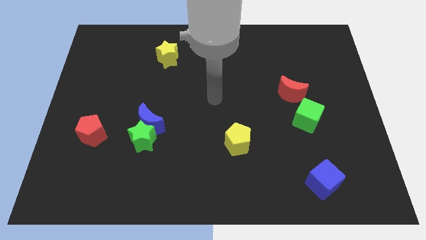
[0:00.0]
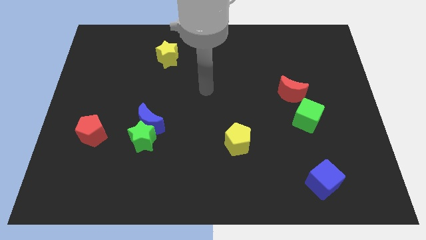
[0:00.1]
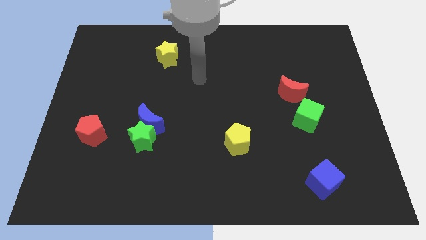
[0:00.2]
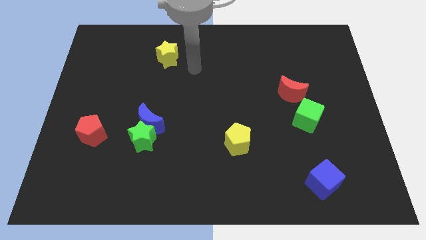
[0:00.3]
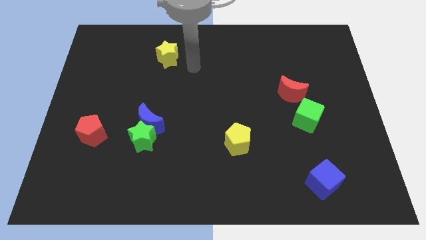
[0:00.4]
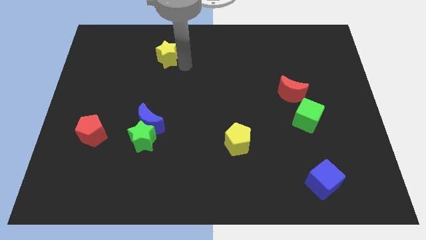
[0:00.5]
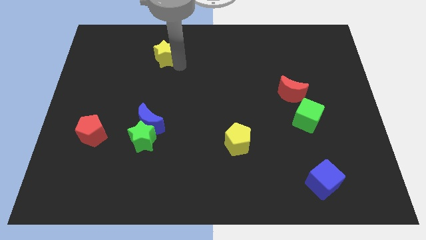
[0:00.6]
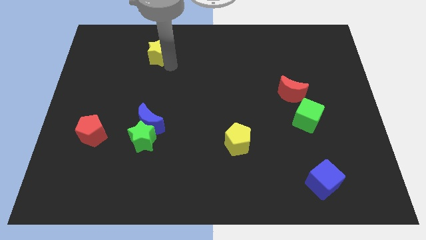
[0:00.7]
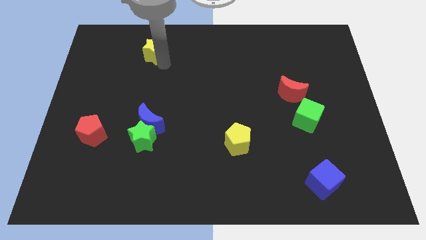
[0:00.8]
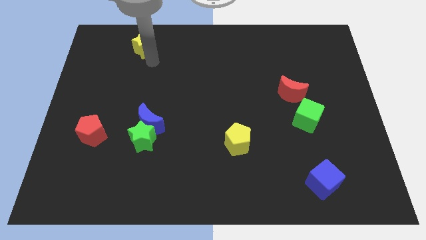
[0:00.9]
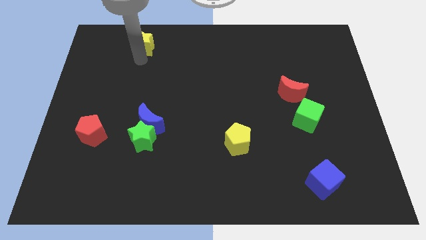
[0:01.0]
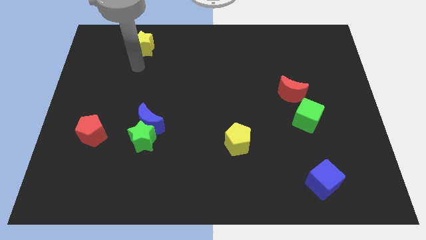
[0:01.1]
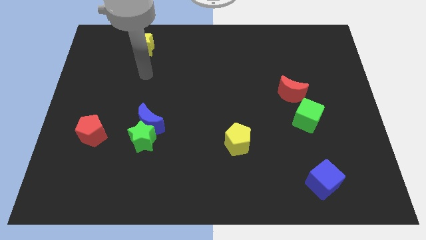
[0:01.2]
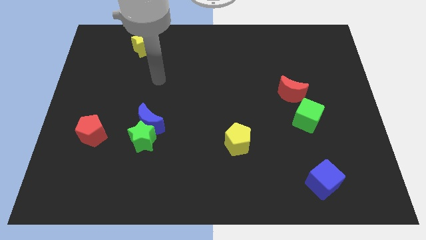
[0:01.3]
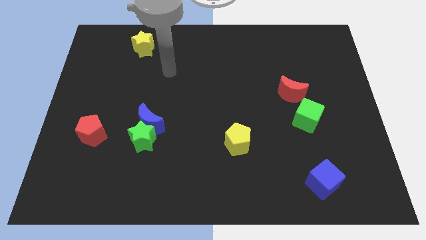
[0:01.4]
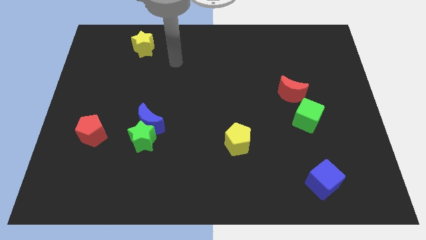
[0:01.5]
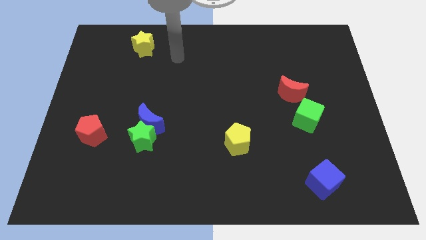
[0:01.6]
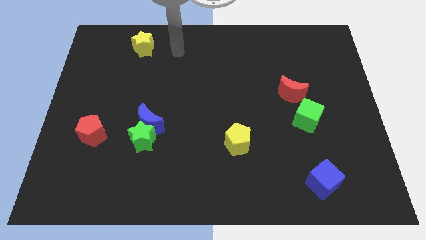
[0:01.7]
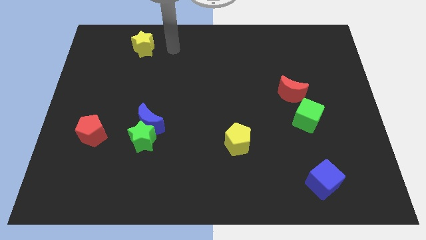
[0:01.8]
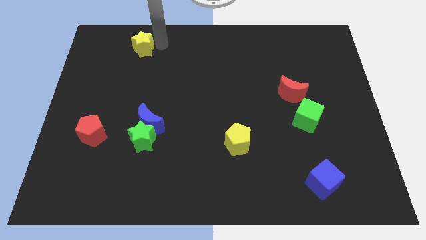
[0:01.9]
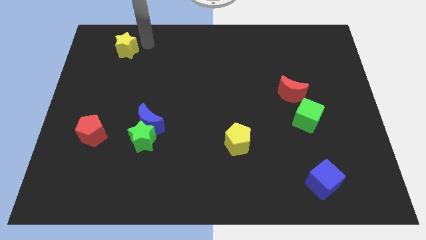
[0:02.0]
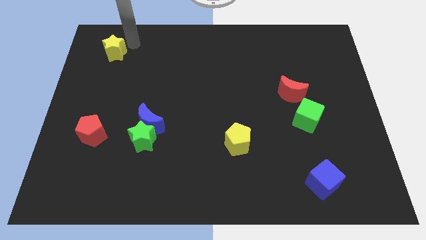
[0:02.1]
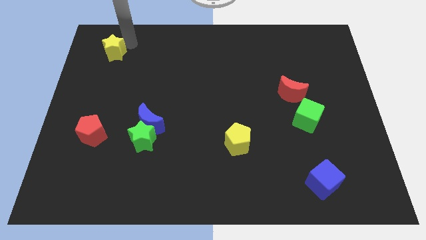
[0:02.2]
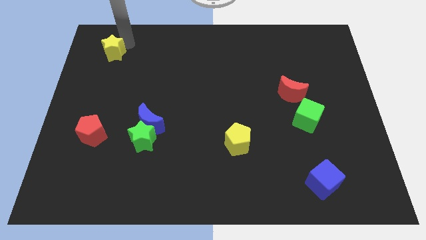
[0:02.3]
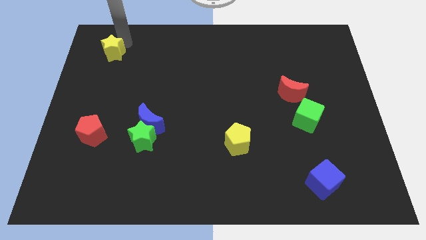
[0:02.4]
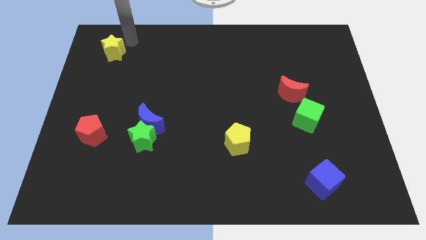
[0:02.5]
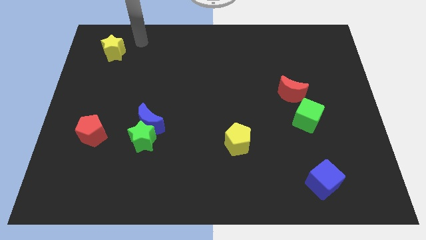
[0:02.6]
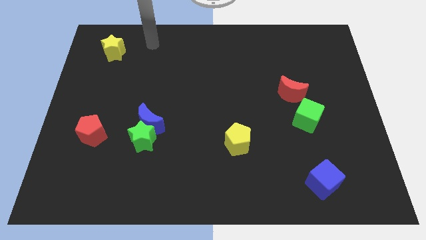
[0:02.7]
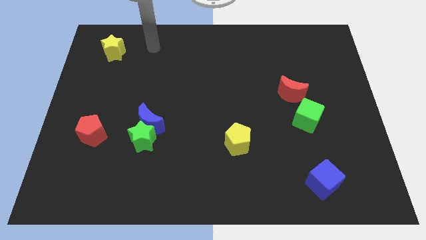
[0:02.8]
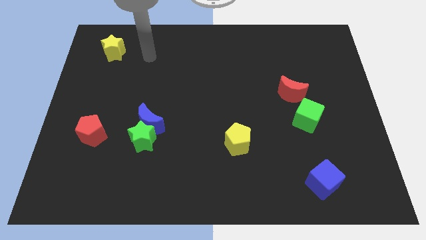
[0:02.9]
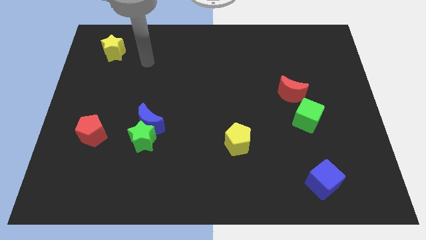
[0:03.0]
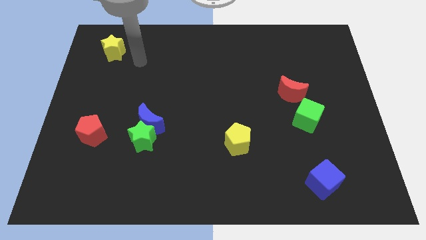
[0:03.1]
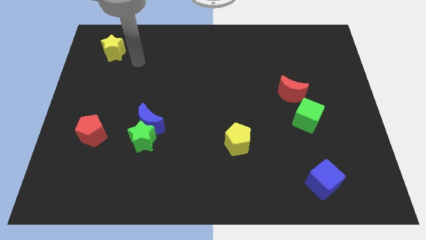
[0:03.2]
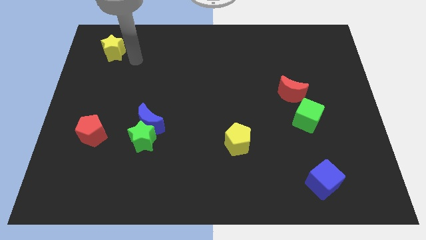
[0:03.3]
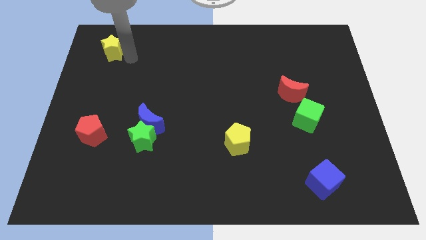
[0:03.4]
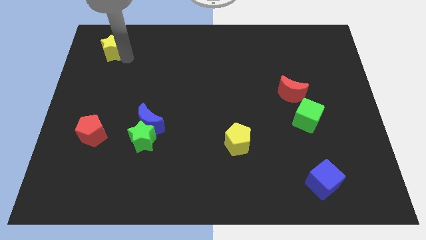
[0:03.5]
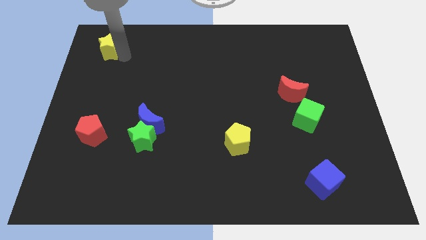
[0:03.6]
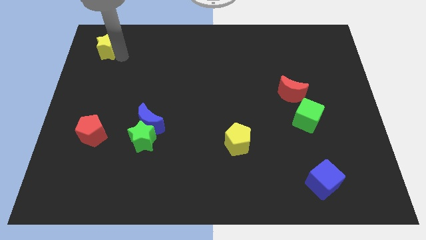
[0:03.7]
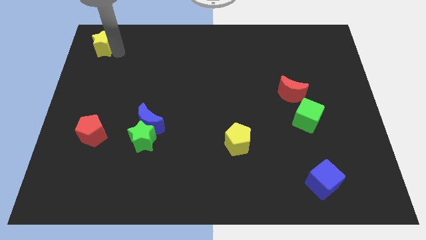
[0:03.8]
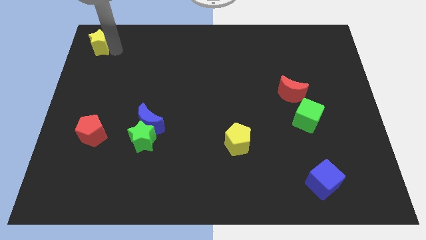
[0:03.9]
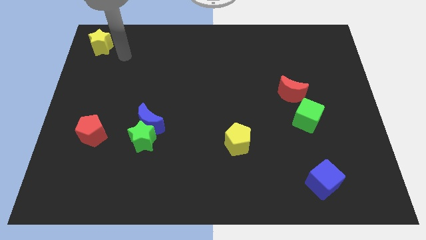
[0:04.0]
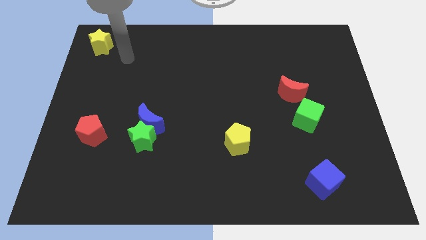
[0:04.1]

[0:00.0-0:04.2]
push the yellow star towards the top left corner of the board

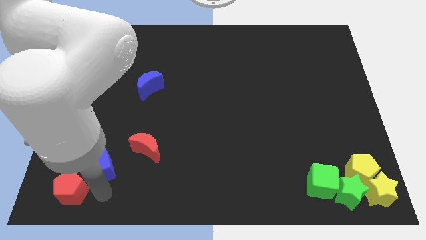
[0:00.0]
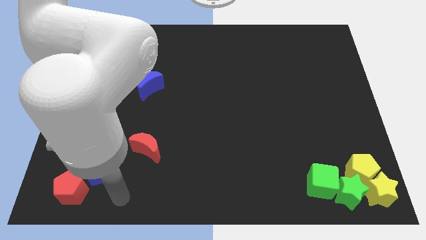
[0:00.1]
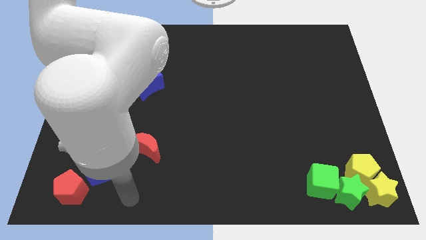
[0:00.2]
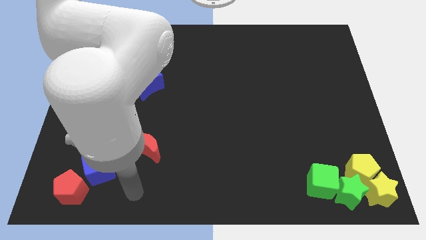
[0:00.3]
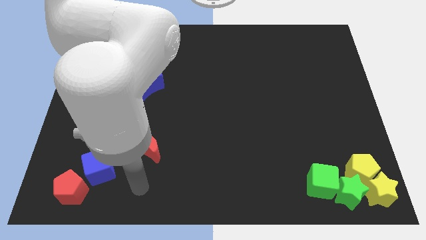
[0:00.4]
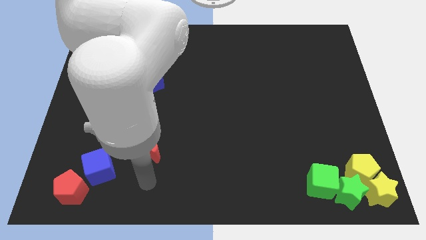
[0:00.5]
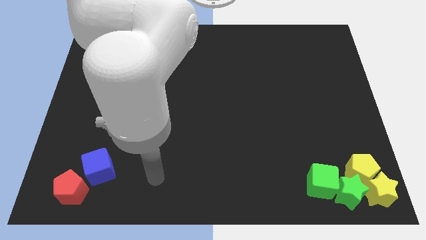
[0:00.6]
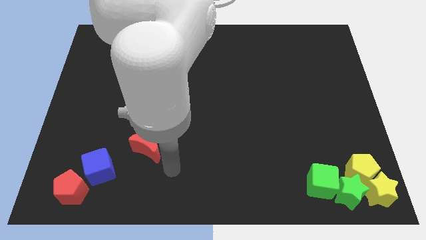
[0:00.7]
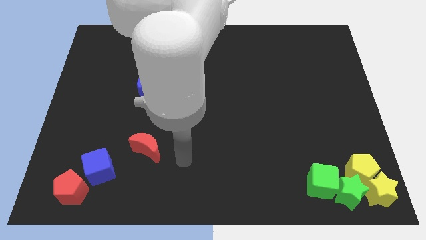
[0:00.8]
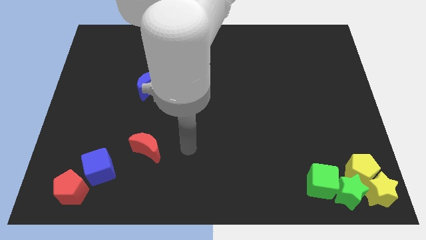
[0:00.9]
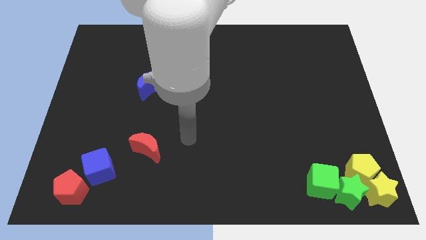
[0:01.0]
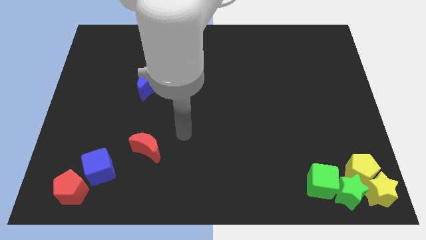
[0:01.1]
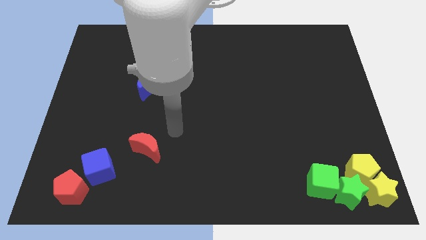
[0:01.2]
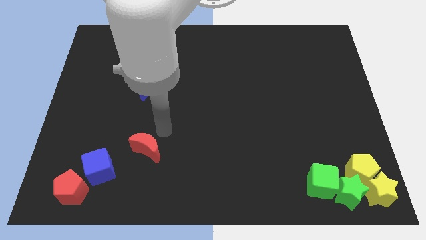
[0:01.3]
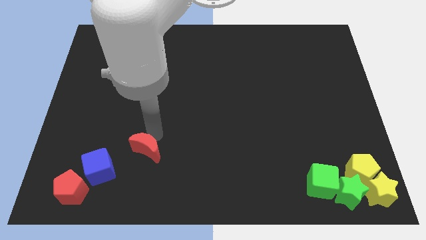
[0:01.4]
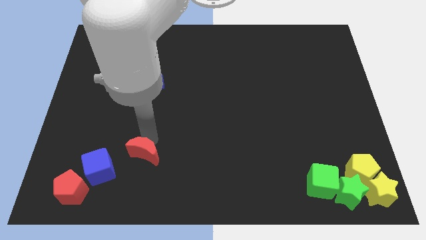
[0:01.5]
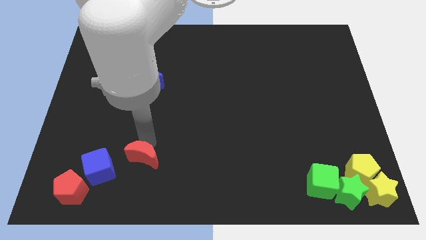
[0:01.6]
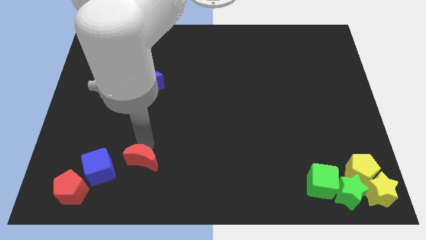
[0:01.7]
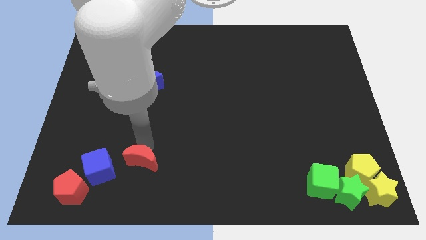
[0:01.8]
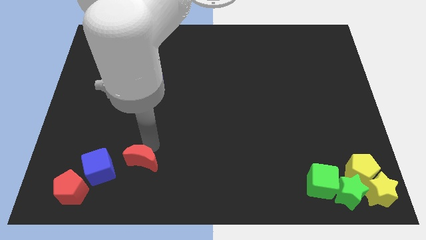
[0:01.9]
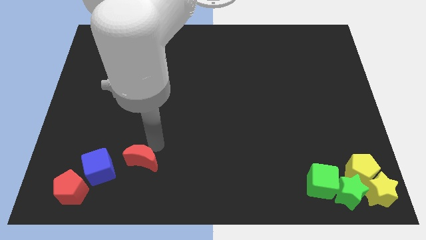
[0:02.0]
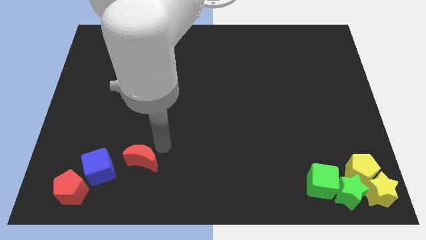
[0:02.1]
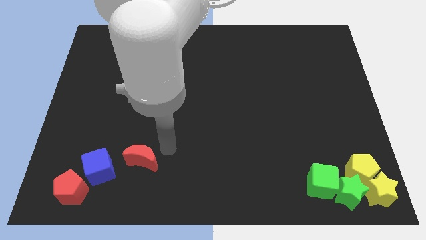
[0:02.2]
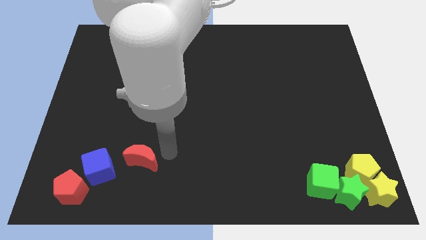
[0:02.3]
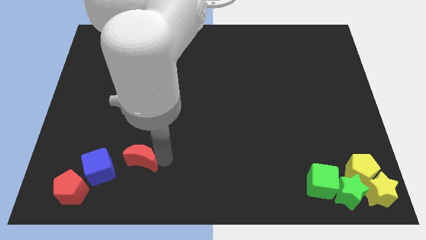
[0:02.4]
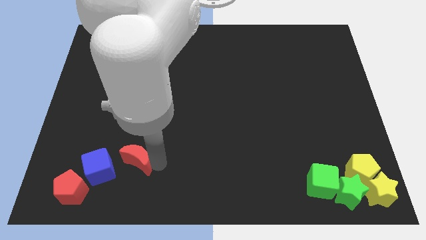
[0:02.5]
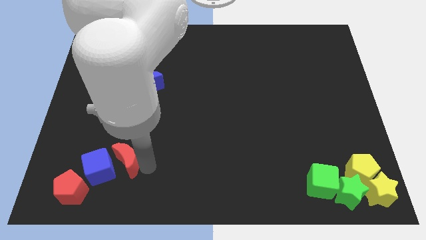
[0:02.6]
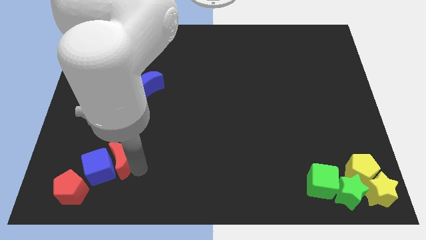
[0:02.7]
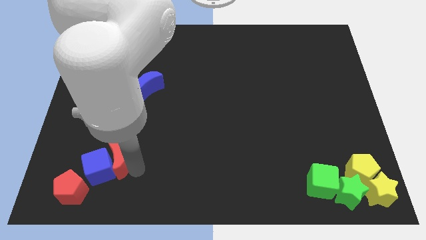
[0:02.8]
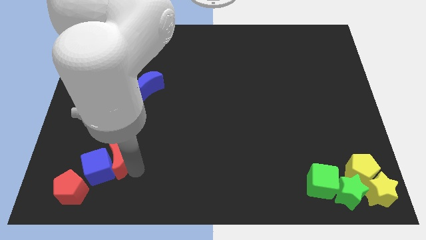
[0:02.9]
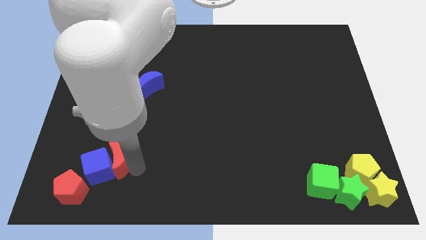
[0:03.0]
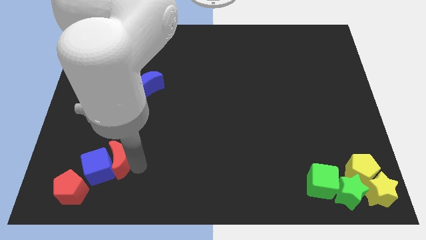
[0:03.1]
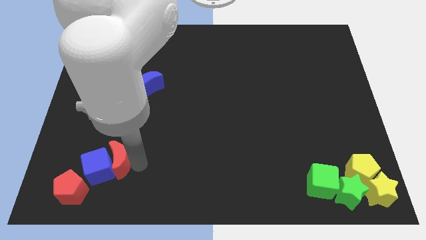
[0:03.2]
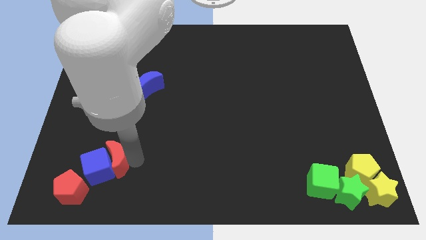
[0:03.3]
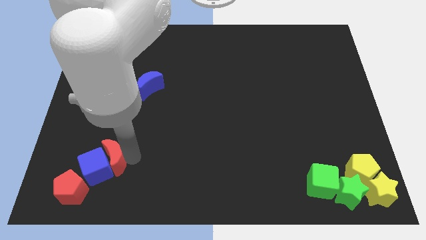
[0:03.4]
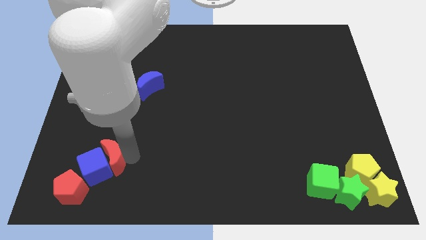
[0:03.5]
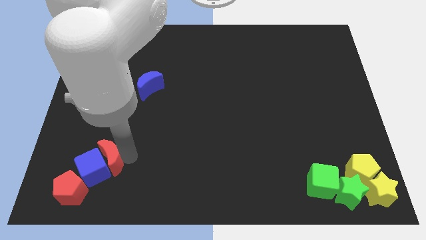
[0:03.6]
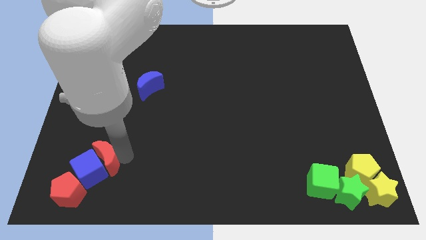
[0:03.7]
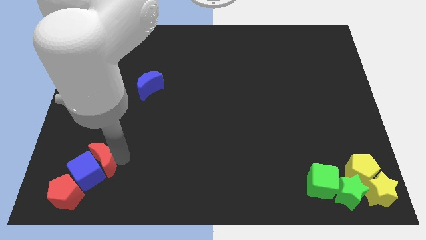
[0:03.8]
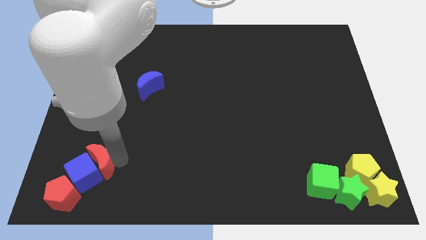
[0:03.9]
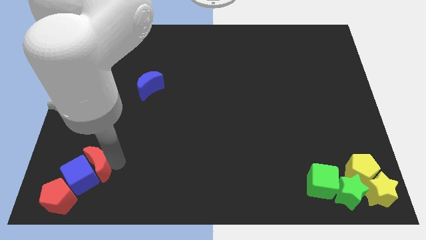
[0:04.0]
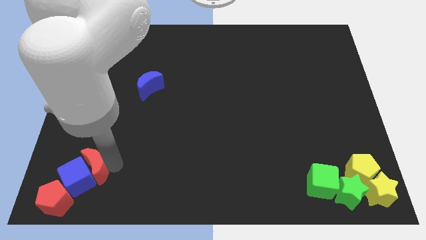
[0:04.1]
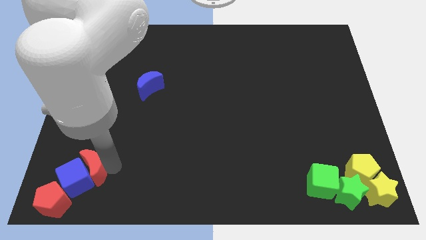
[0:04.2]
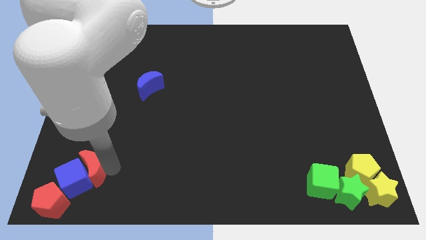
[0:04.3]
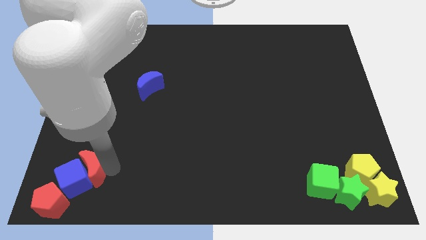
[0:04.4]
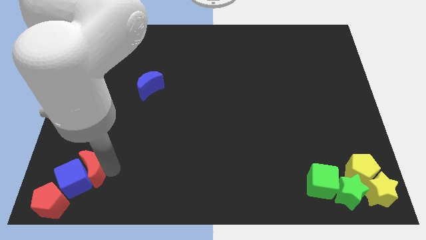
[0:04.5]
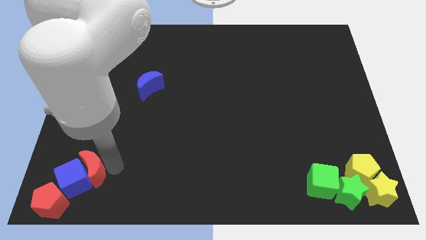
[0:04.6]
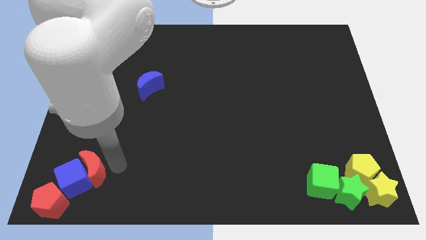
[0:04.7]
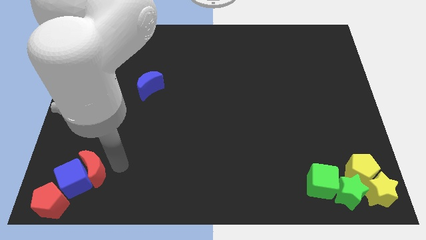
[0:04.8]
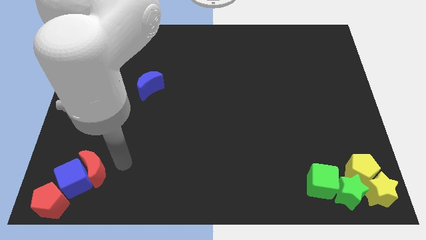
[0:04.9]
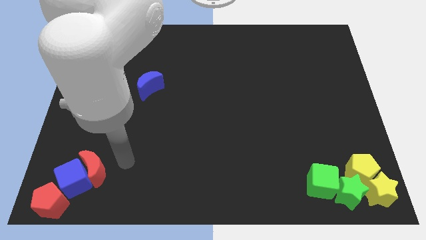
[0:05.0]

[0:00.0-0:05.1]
drag the both red blocks and also blue cube to the bottom left corner of the board
